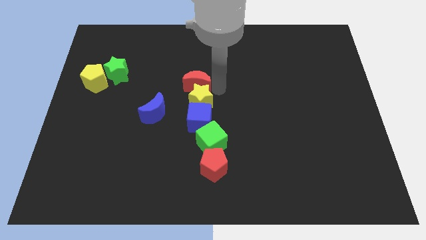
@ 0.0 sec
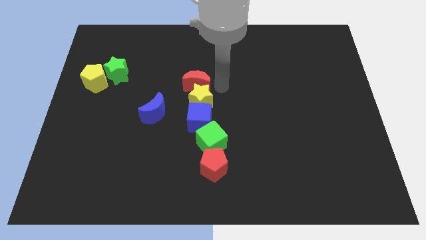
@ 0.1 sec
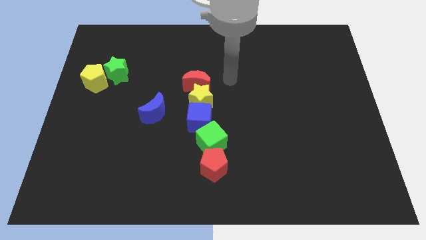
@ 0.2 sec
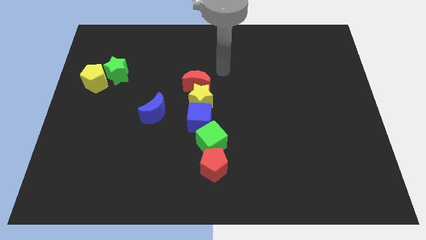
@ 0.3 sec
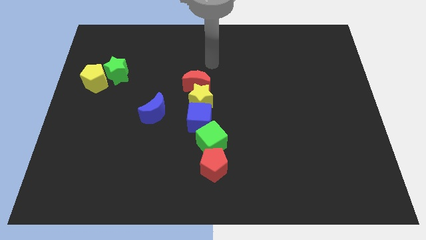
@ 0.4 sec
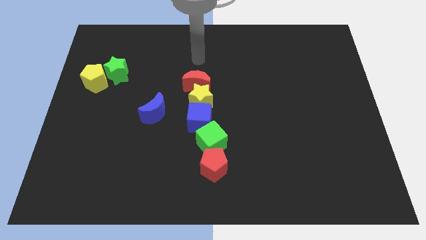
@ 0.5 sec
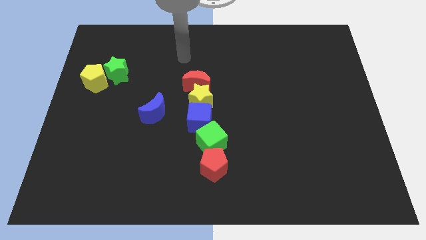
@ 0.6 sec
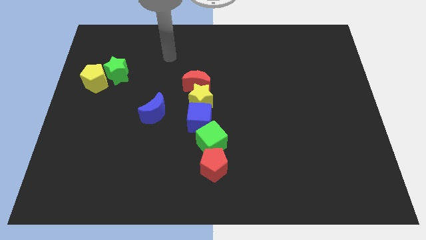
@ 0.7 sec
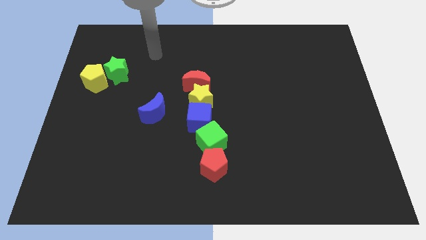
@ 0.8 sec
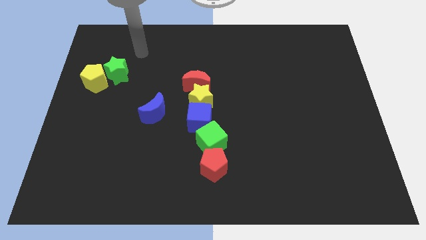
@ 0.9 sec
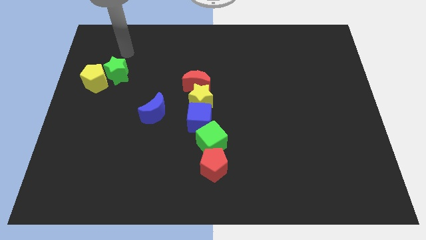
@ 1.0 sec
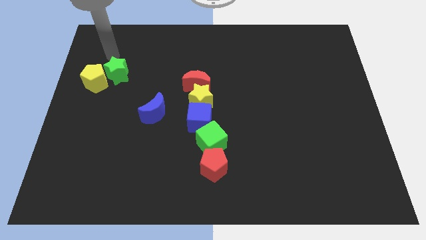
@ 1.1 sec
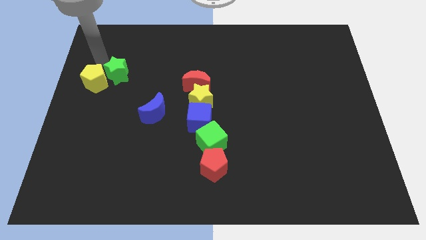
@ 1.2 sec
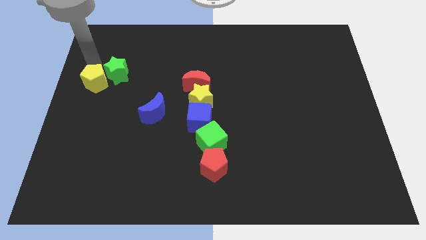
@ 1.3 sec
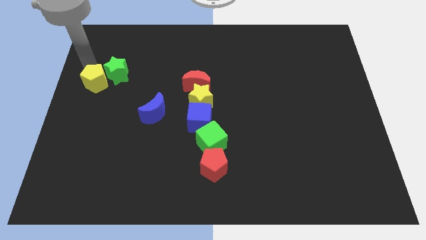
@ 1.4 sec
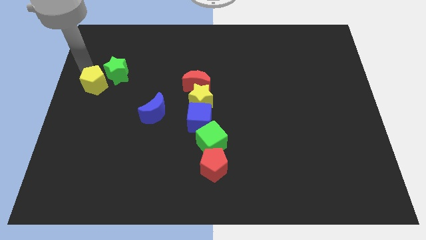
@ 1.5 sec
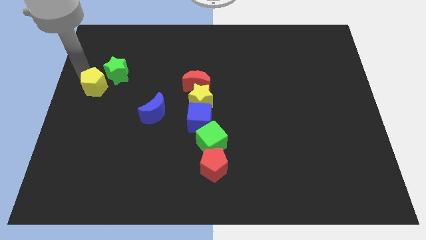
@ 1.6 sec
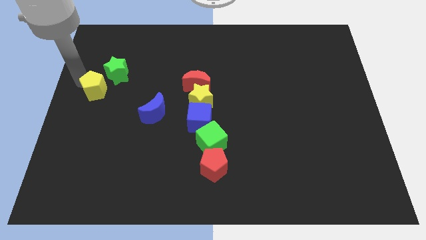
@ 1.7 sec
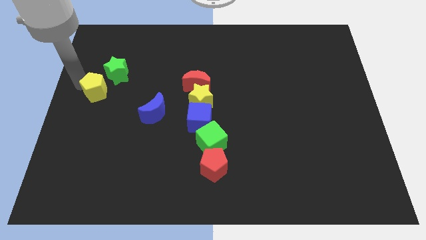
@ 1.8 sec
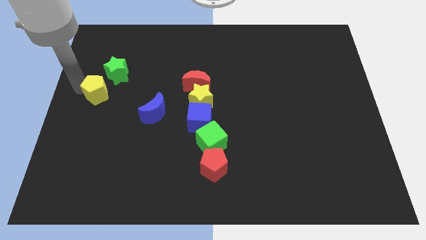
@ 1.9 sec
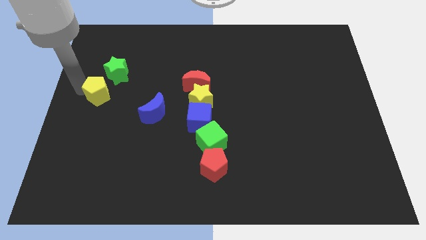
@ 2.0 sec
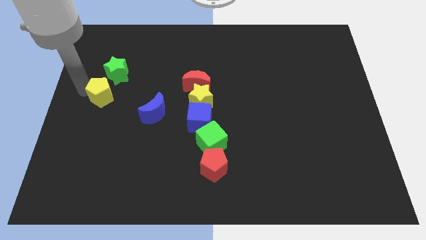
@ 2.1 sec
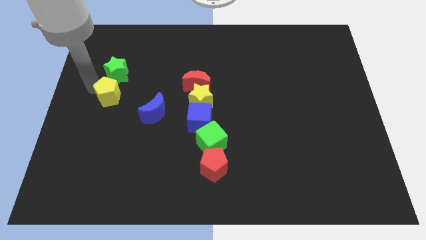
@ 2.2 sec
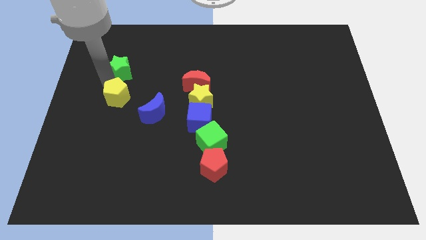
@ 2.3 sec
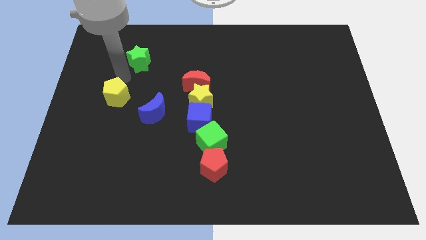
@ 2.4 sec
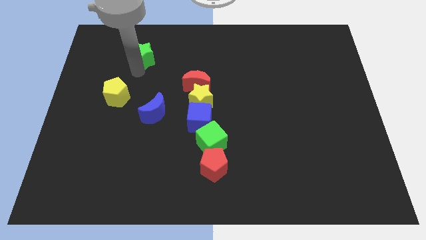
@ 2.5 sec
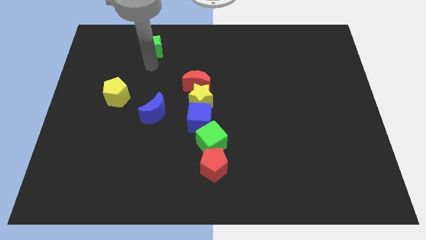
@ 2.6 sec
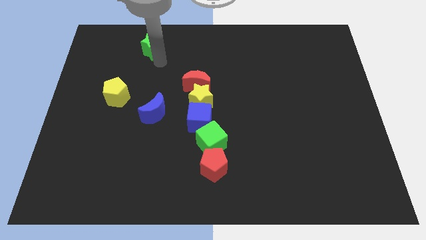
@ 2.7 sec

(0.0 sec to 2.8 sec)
separate the yellow pentagon and green star

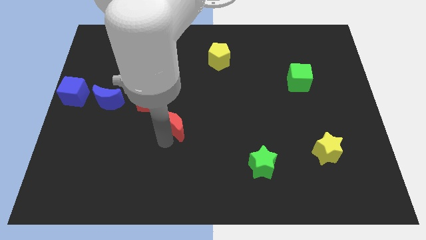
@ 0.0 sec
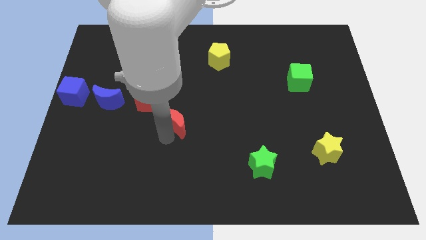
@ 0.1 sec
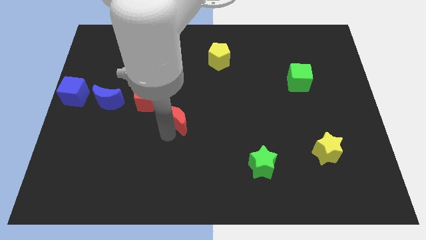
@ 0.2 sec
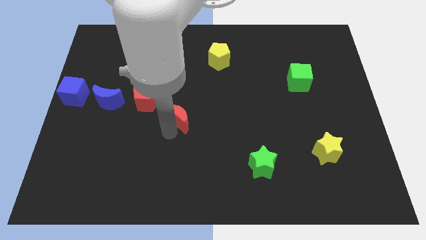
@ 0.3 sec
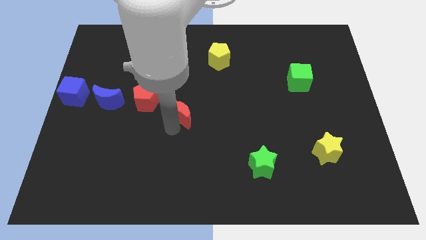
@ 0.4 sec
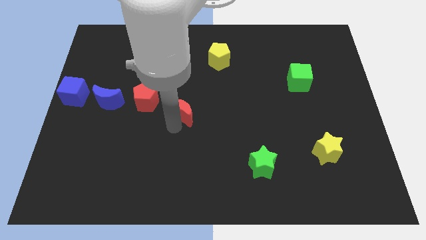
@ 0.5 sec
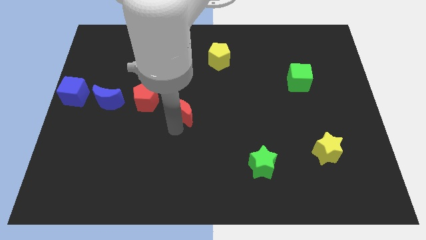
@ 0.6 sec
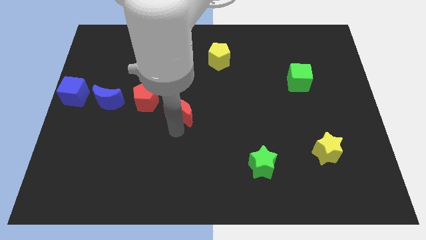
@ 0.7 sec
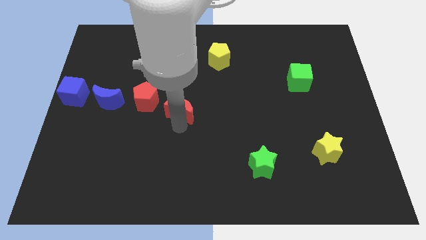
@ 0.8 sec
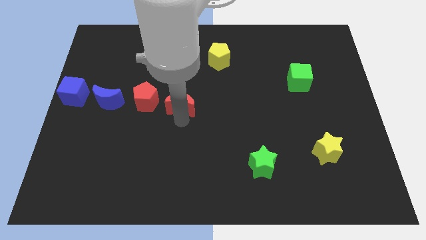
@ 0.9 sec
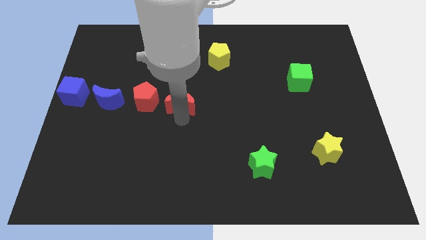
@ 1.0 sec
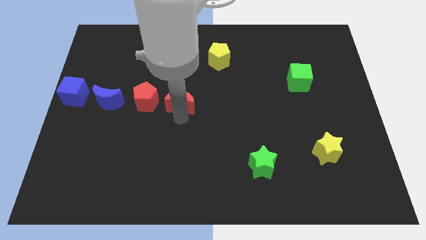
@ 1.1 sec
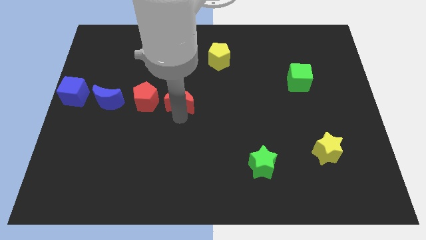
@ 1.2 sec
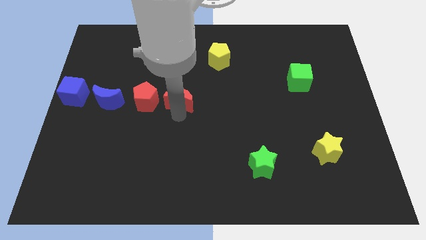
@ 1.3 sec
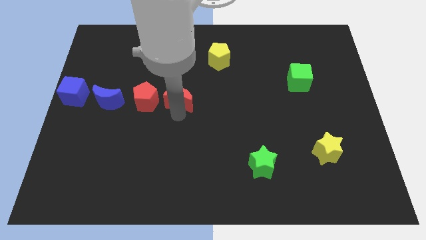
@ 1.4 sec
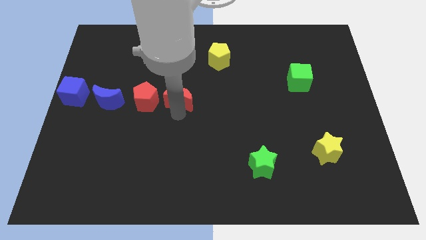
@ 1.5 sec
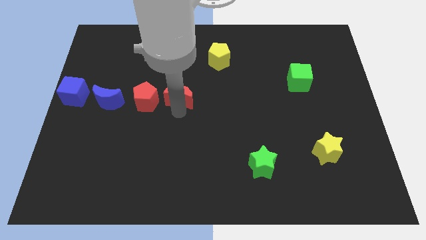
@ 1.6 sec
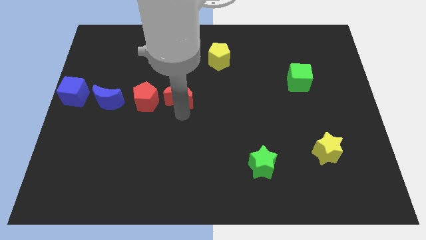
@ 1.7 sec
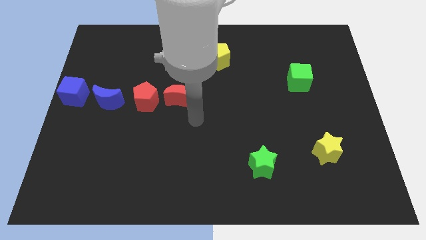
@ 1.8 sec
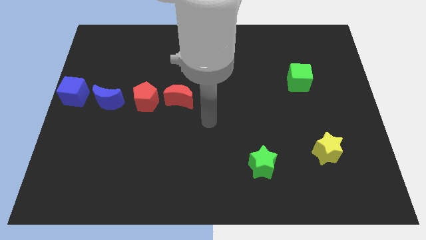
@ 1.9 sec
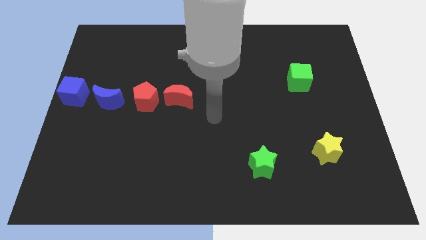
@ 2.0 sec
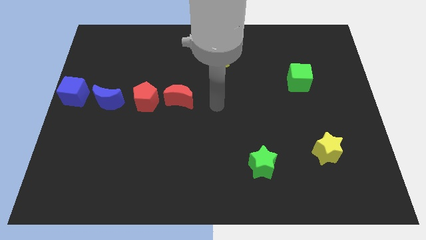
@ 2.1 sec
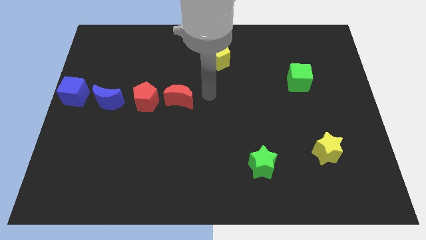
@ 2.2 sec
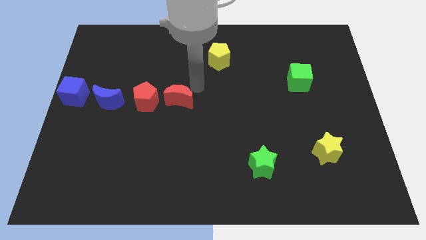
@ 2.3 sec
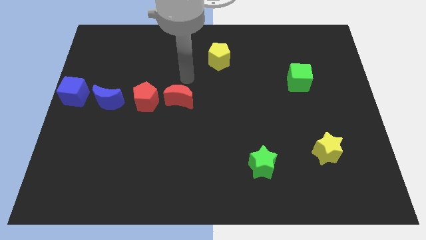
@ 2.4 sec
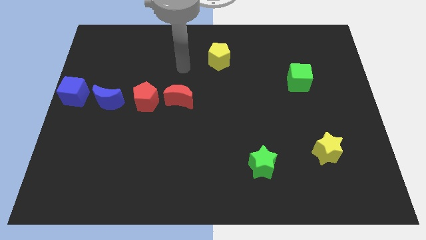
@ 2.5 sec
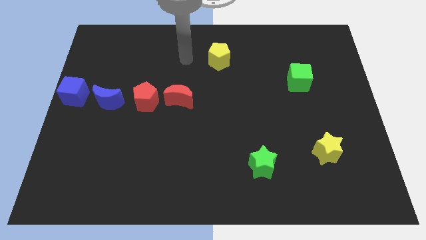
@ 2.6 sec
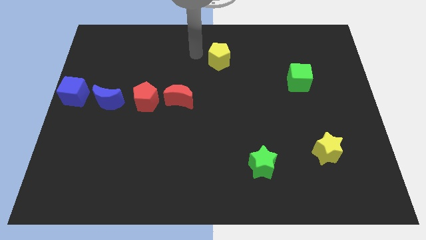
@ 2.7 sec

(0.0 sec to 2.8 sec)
put the red moon at the right side of the red pentagon

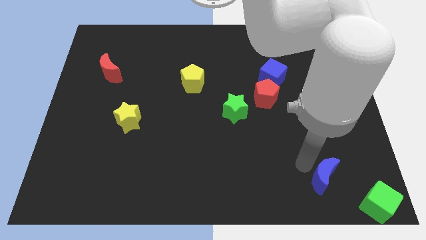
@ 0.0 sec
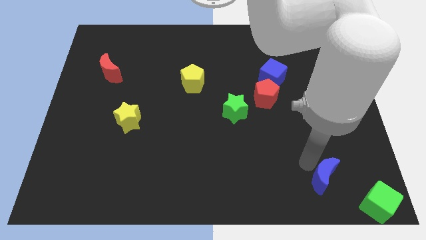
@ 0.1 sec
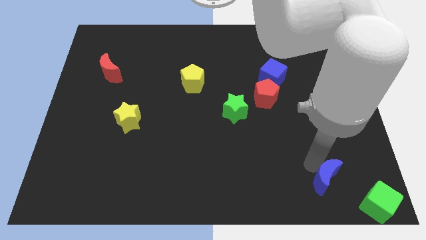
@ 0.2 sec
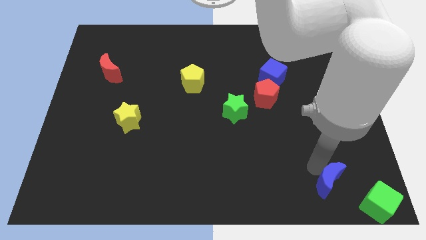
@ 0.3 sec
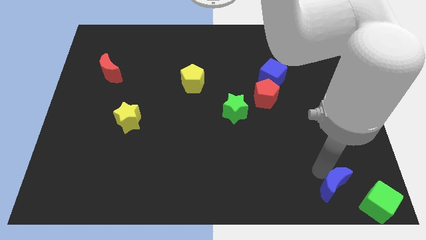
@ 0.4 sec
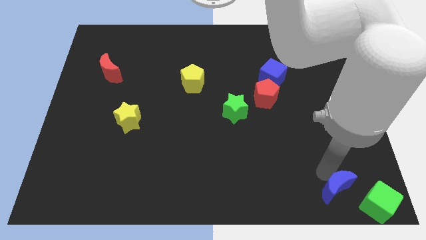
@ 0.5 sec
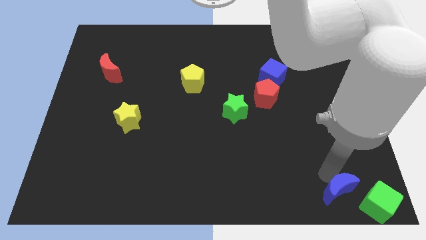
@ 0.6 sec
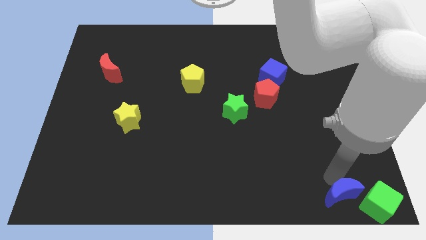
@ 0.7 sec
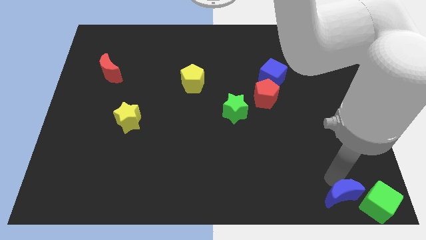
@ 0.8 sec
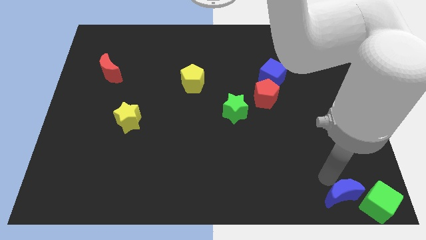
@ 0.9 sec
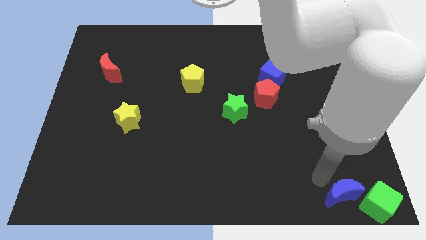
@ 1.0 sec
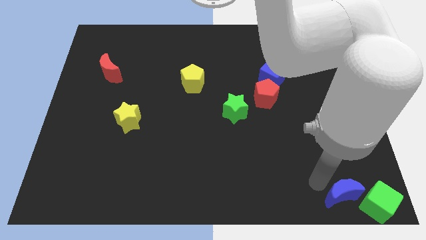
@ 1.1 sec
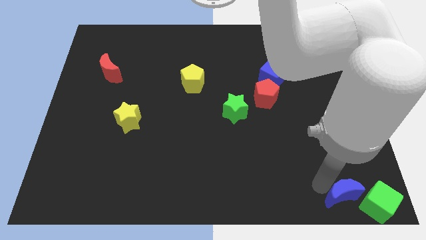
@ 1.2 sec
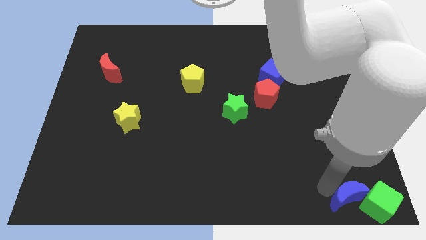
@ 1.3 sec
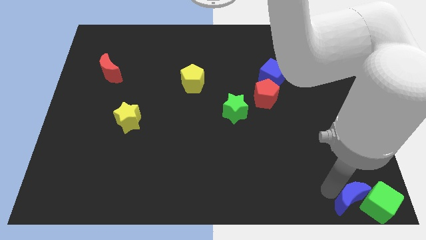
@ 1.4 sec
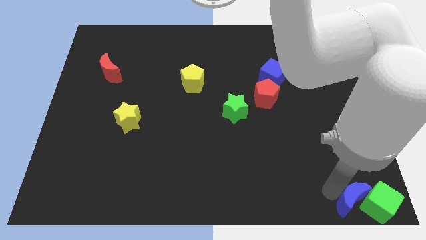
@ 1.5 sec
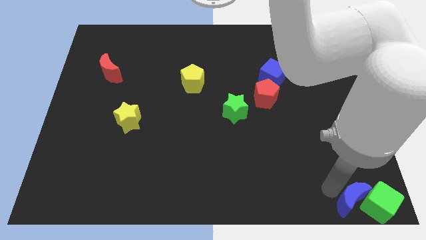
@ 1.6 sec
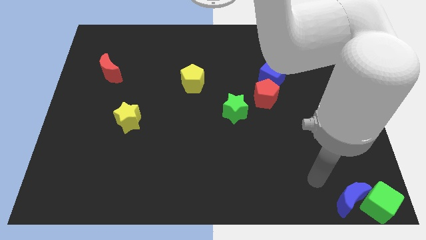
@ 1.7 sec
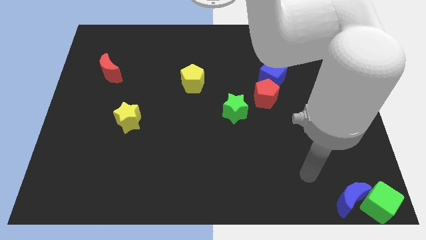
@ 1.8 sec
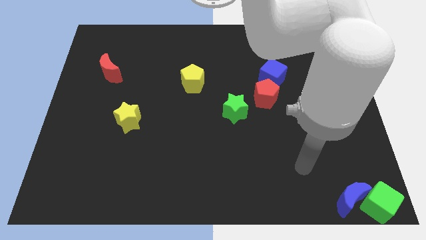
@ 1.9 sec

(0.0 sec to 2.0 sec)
place blue moon to the bottom right corner of the board

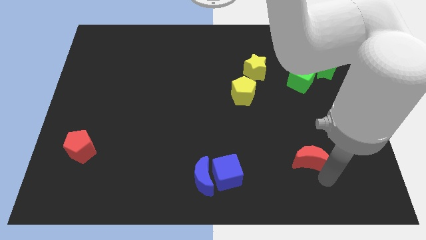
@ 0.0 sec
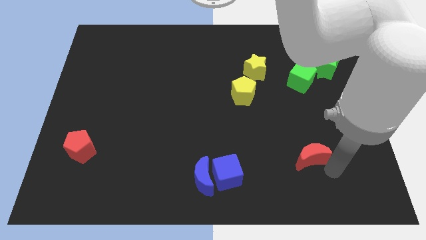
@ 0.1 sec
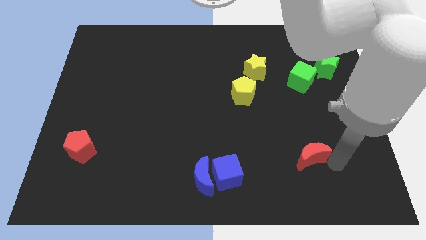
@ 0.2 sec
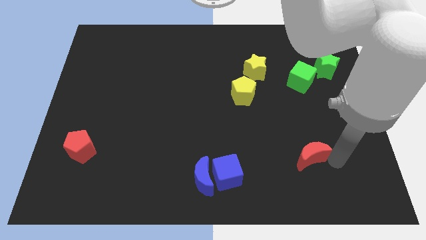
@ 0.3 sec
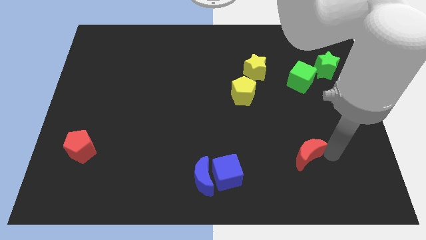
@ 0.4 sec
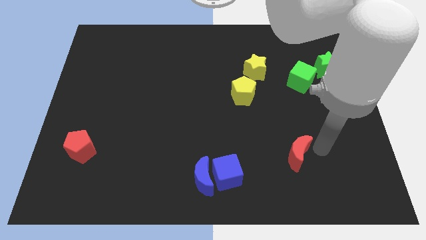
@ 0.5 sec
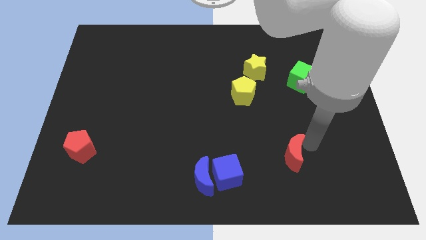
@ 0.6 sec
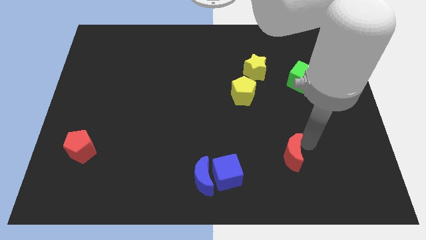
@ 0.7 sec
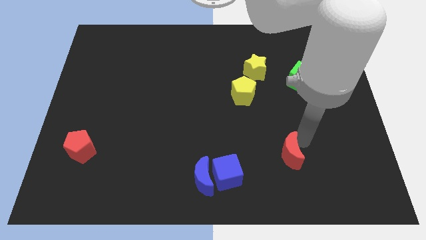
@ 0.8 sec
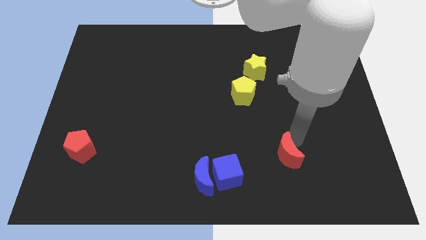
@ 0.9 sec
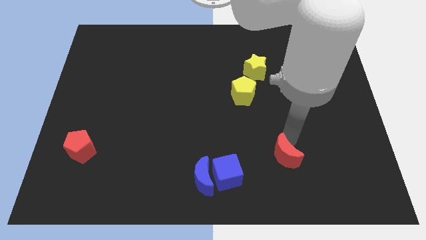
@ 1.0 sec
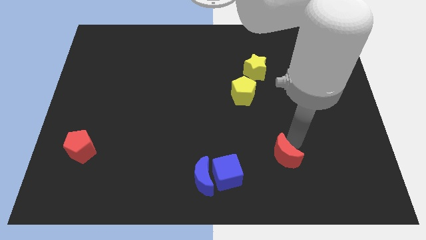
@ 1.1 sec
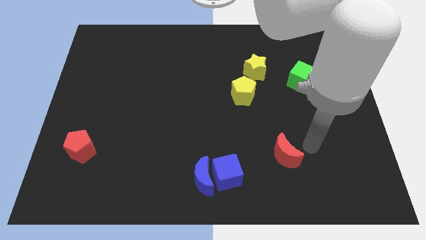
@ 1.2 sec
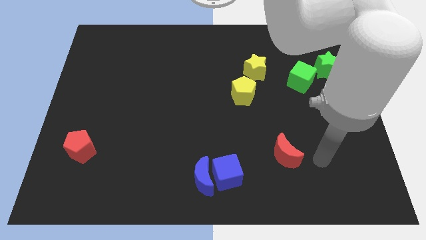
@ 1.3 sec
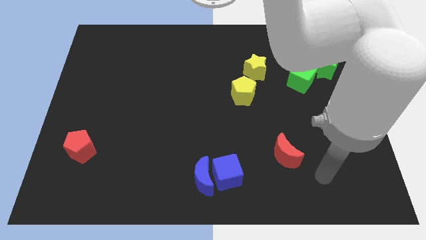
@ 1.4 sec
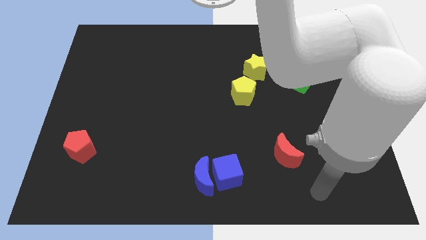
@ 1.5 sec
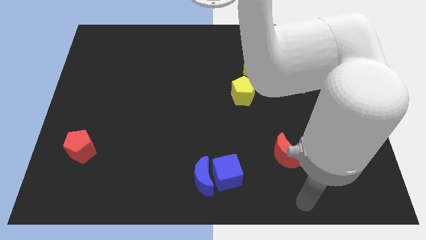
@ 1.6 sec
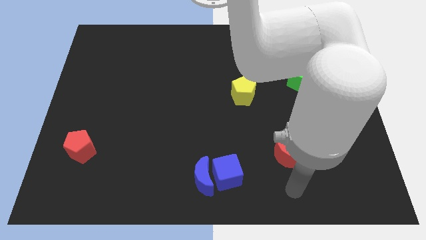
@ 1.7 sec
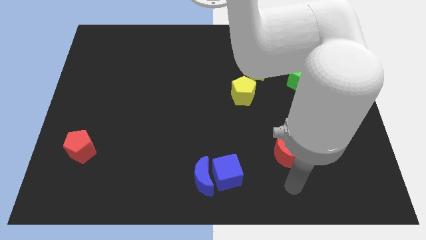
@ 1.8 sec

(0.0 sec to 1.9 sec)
move the red moon slightly up
